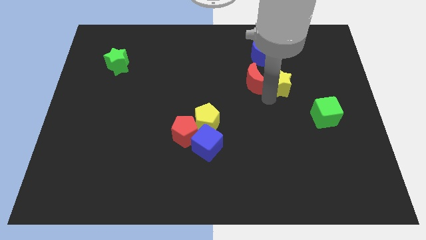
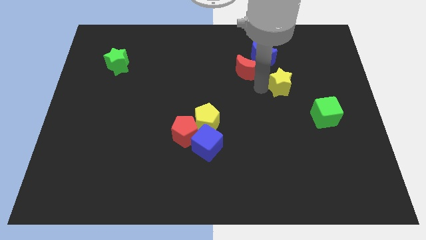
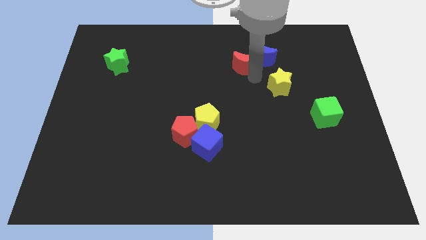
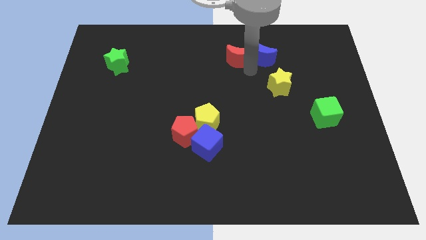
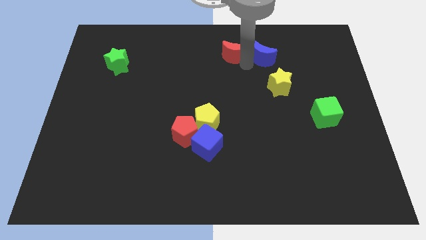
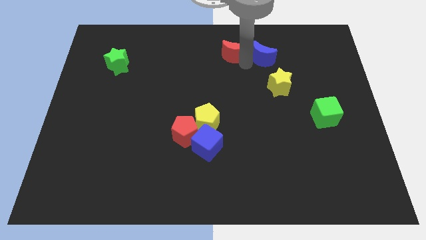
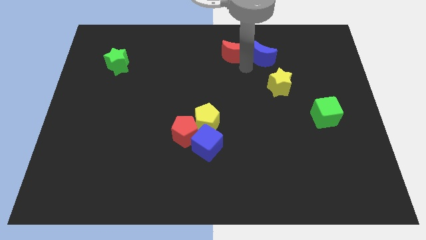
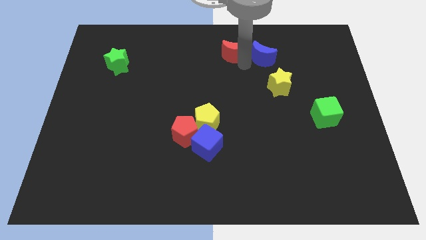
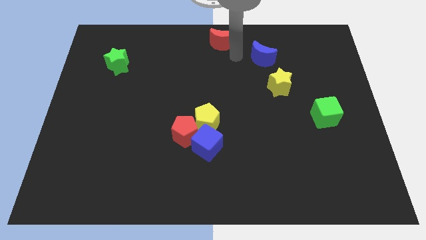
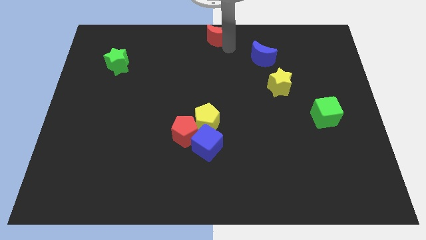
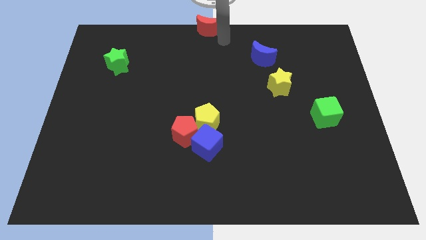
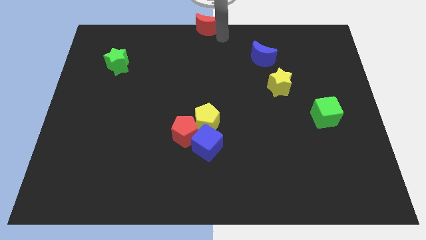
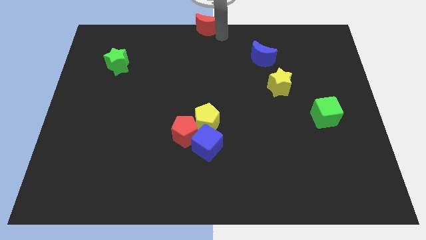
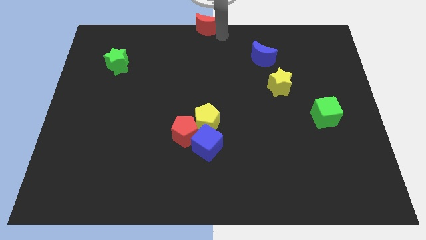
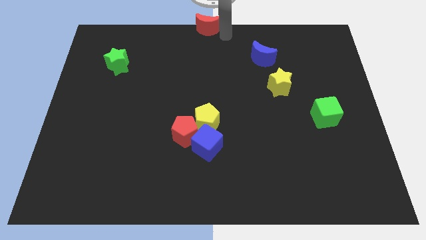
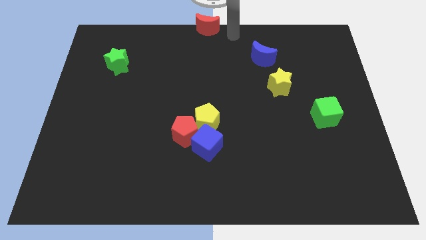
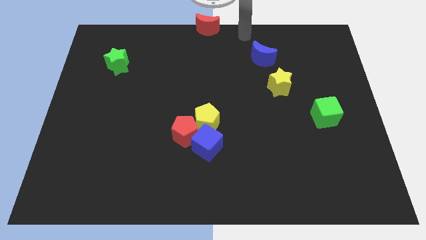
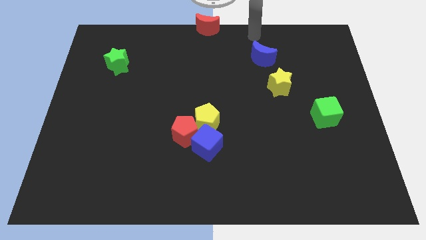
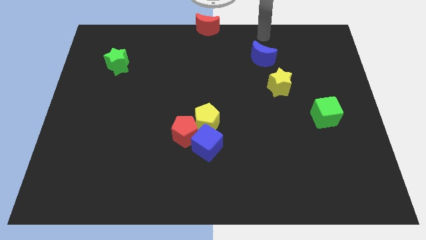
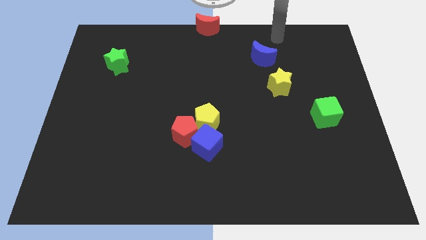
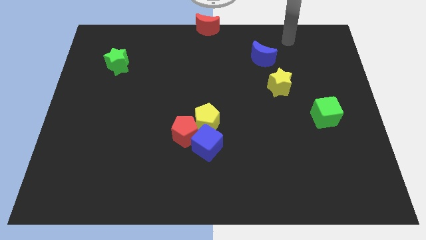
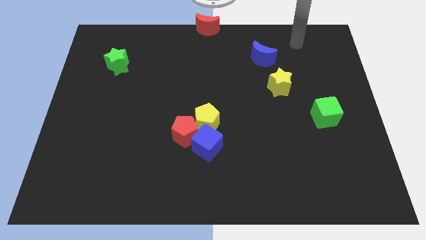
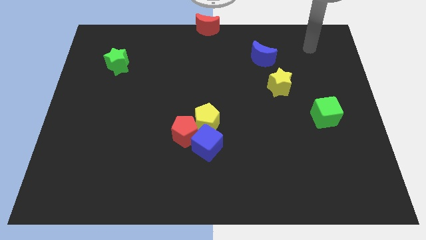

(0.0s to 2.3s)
place red crescent to the top center of the board

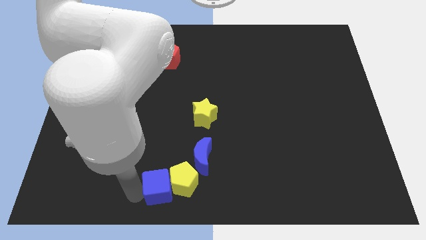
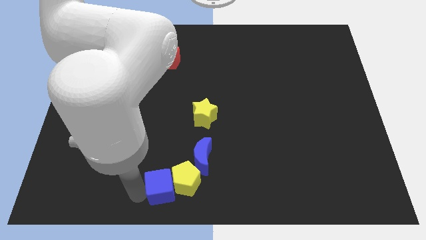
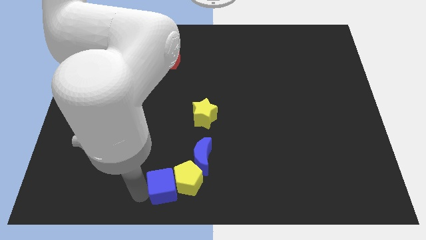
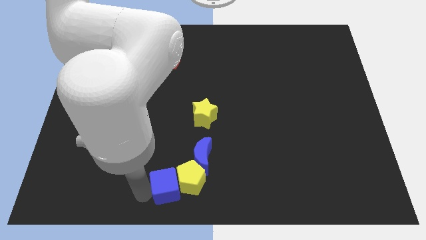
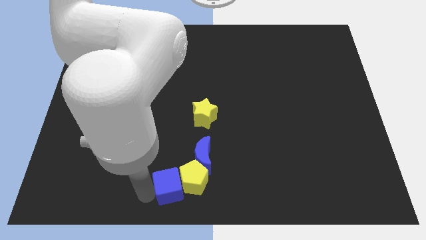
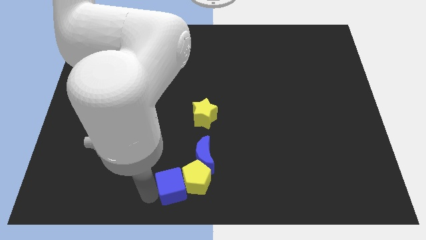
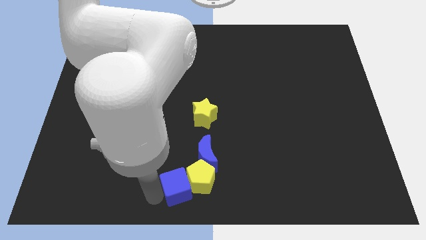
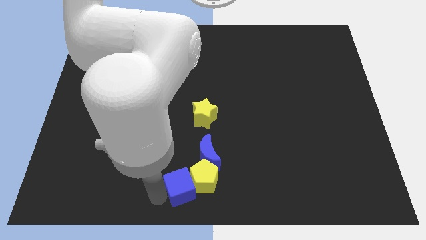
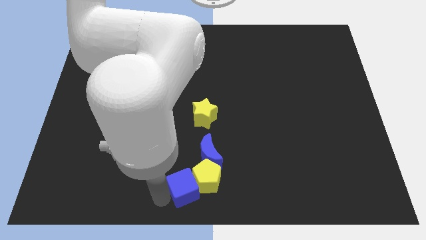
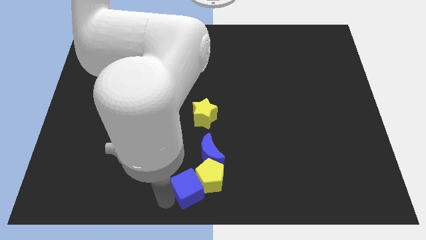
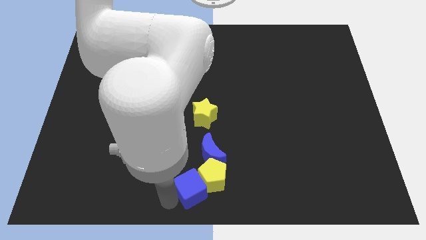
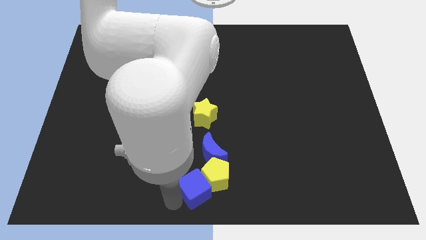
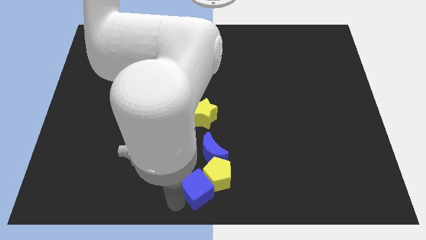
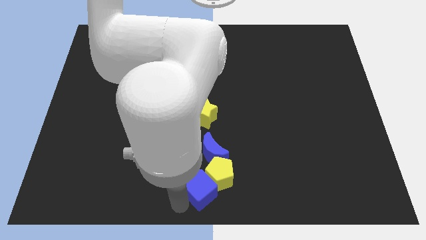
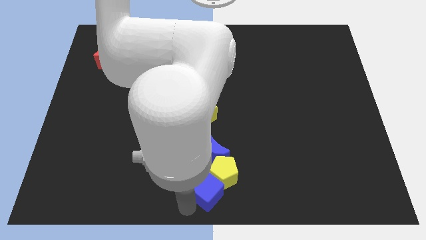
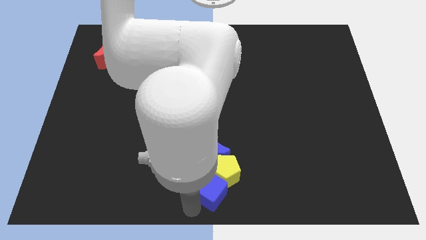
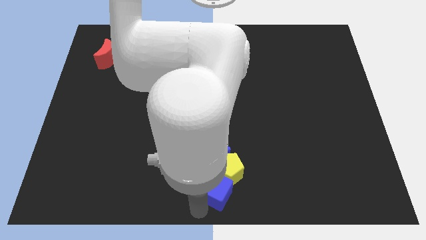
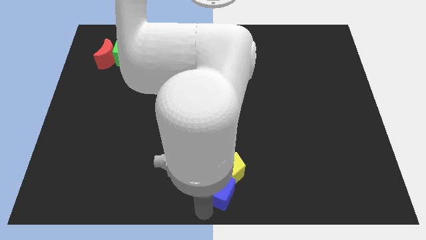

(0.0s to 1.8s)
move the blue cube and yellow pentagon slightly right side of the board

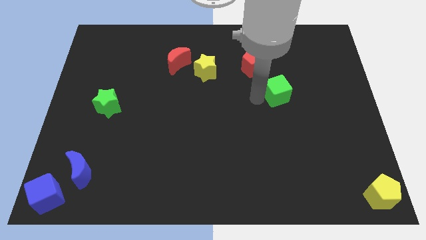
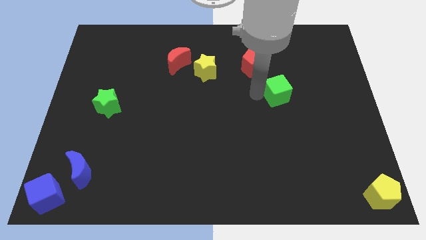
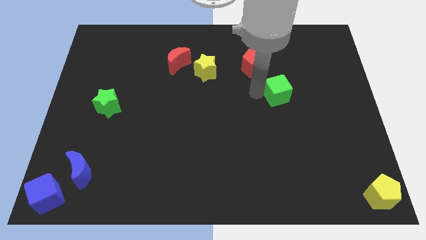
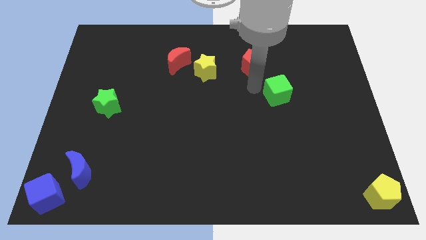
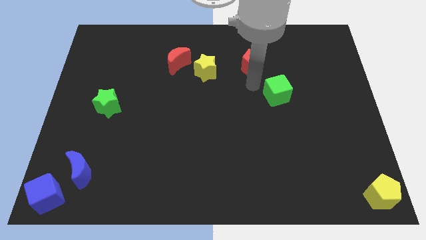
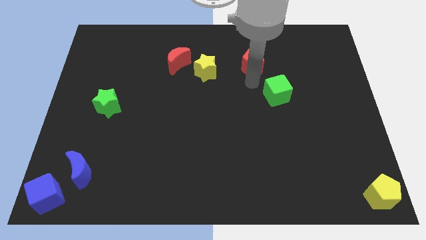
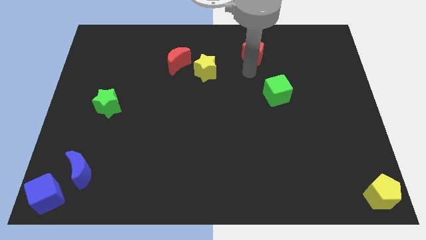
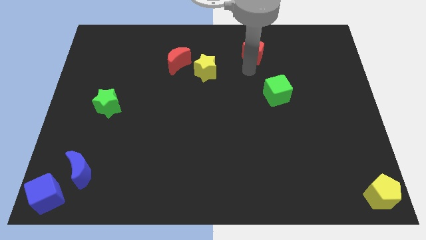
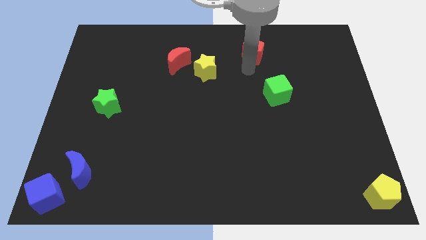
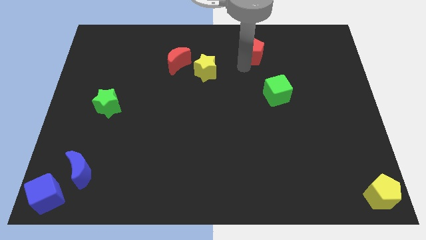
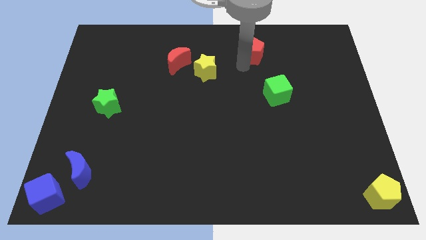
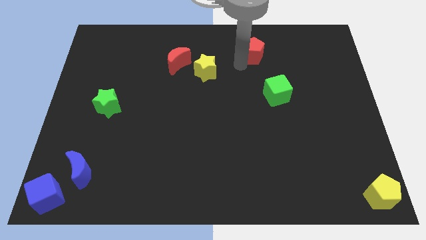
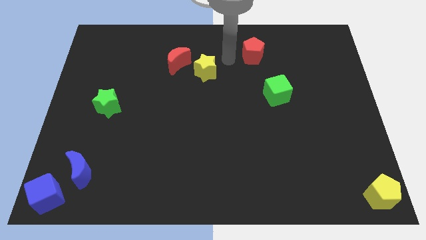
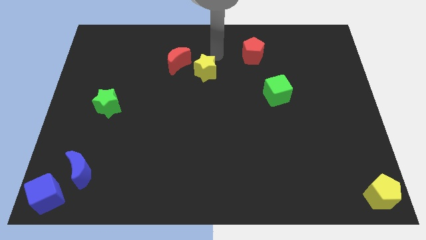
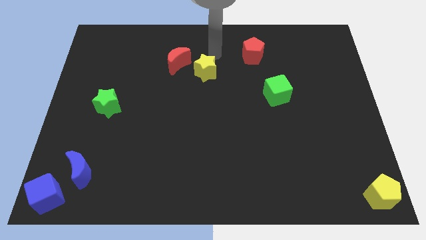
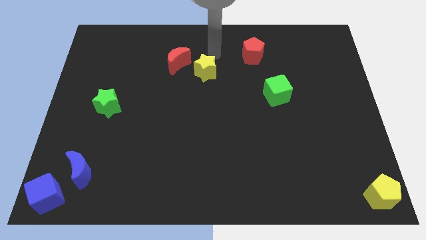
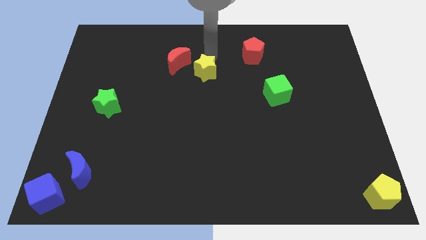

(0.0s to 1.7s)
slightly move the red pentagon up

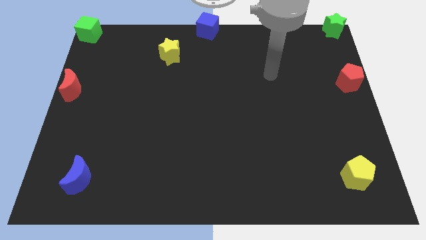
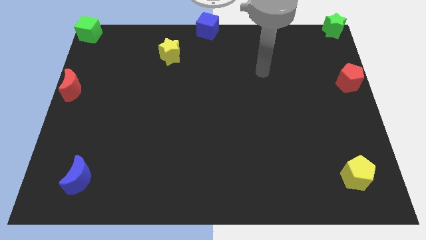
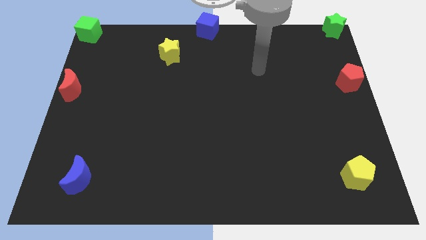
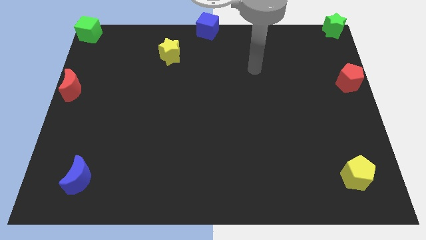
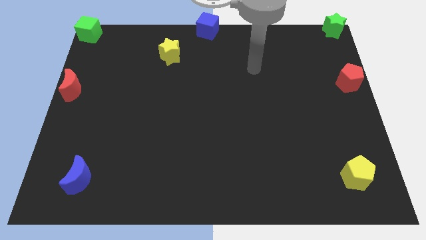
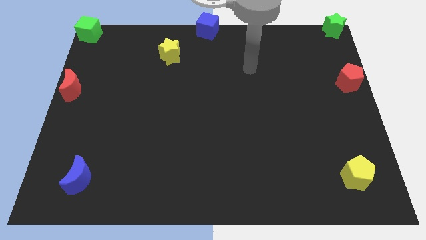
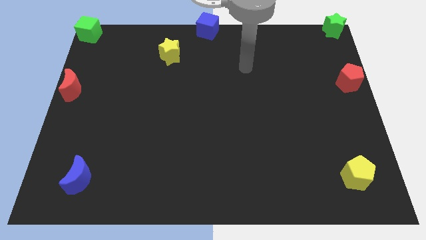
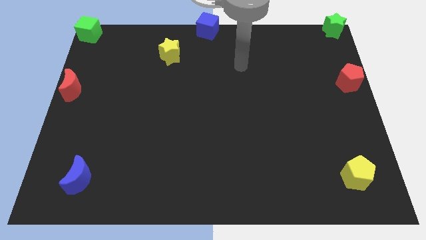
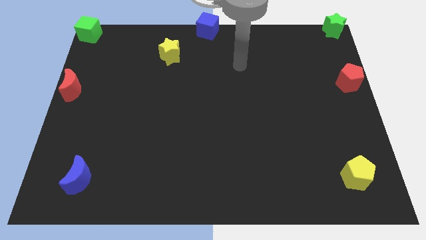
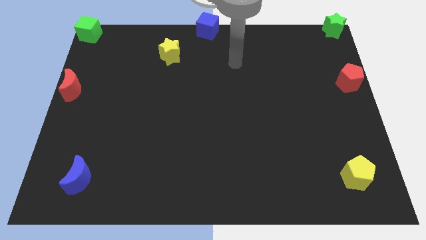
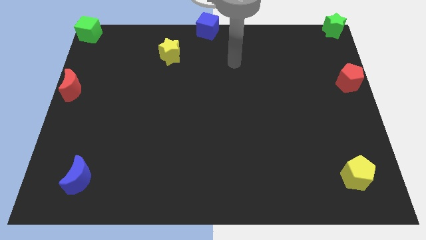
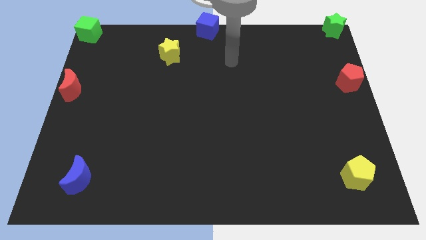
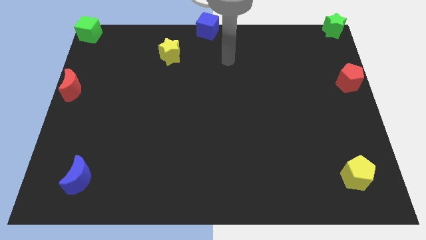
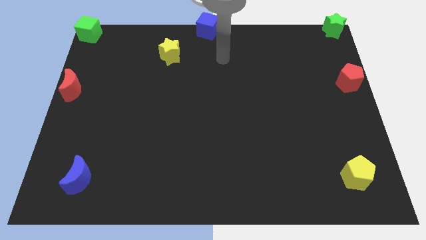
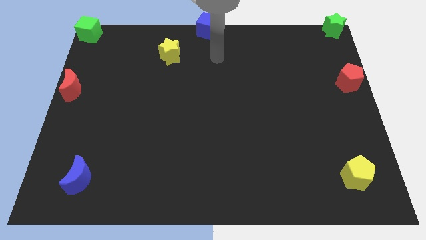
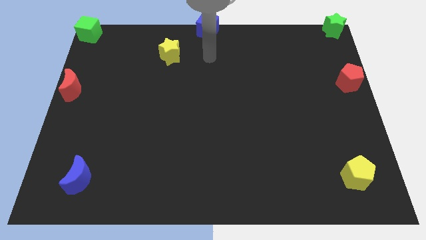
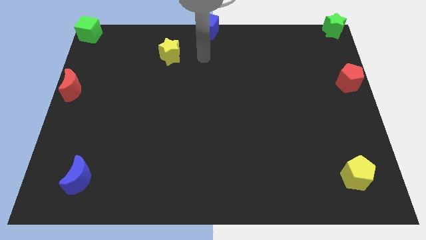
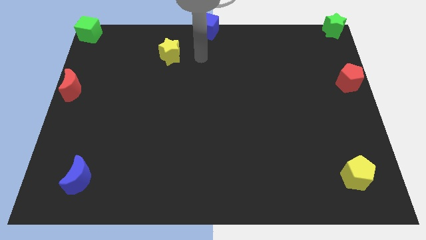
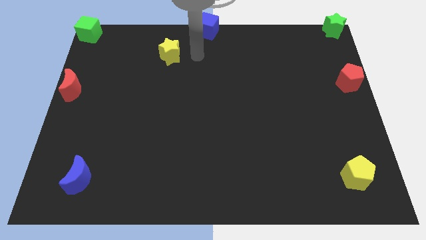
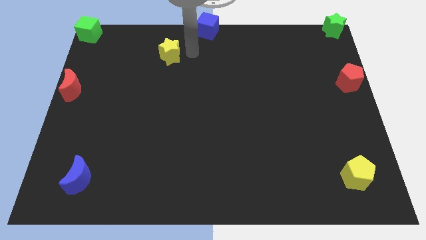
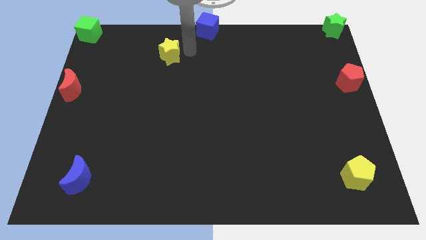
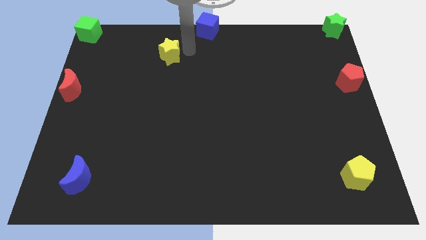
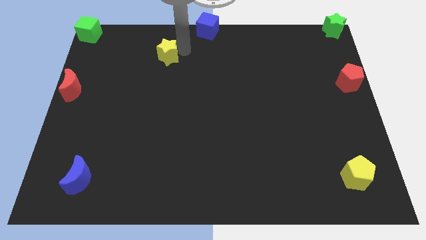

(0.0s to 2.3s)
touch the yellow star with your arm

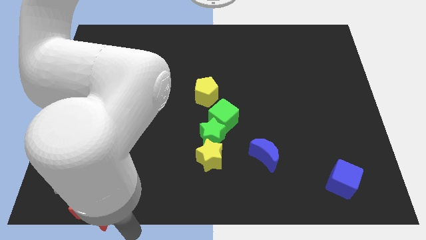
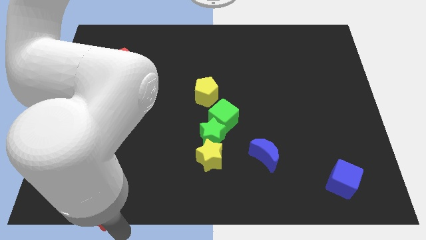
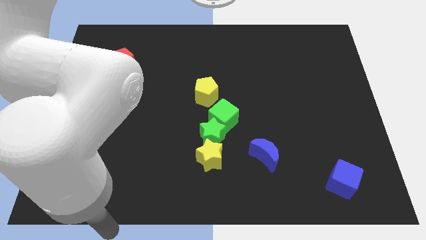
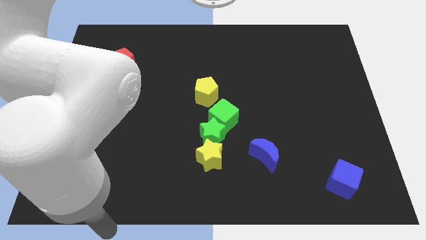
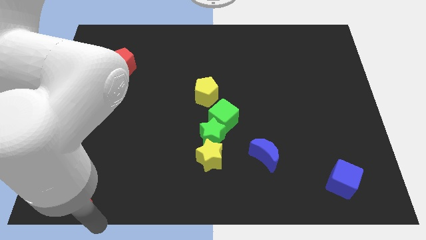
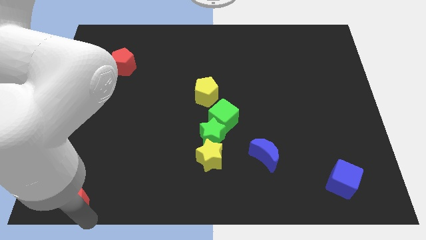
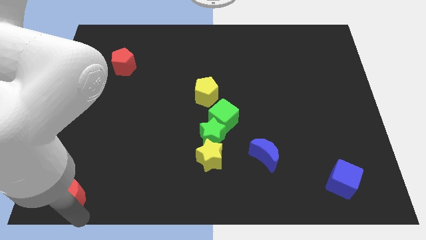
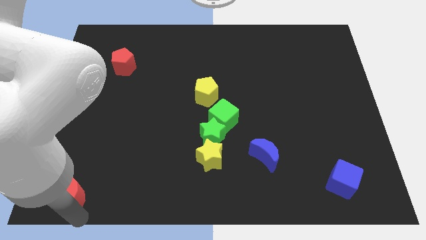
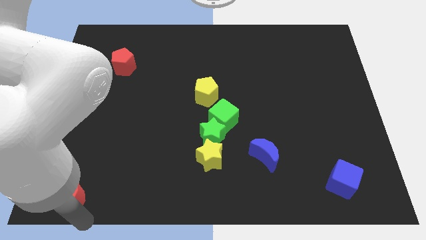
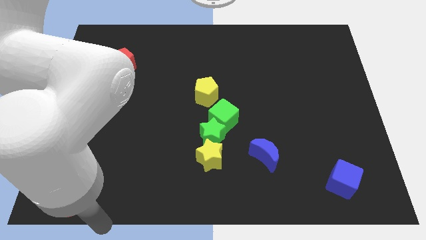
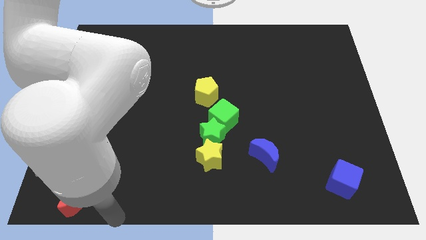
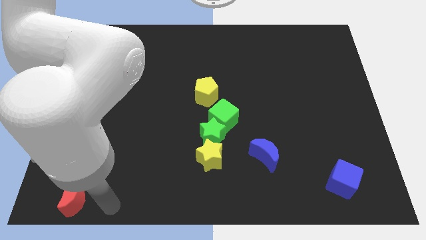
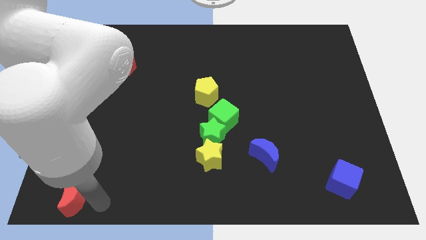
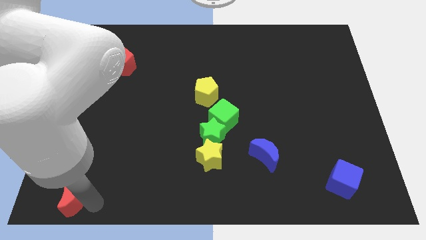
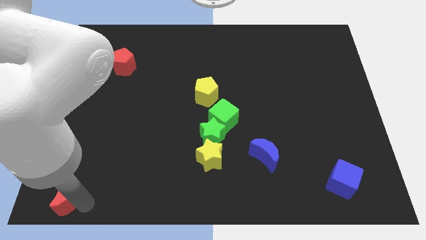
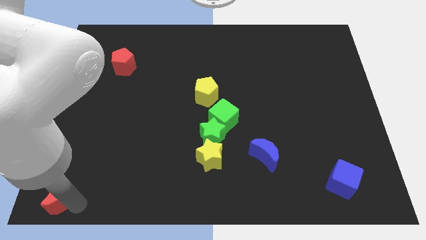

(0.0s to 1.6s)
push the red crescent towards the left
